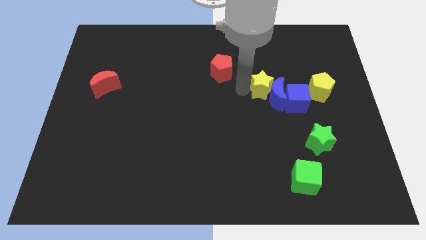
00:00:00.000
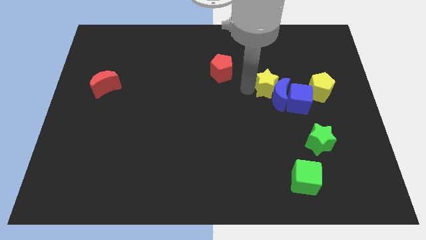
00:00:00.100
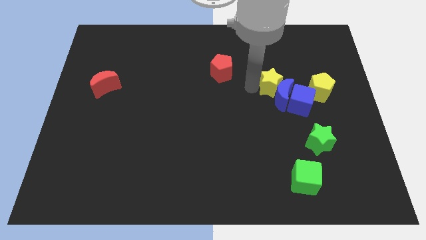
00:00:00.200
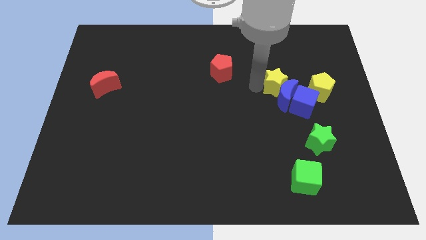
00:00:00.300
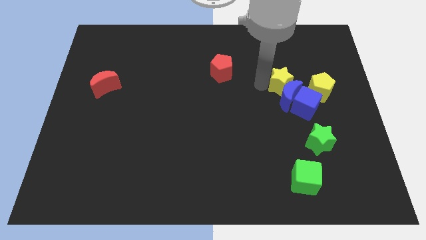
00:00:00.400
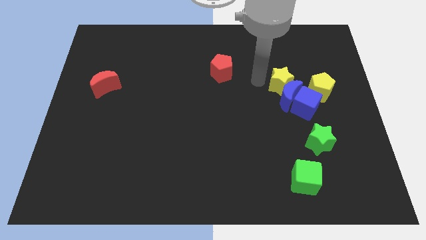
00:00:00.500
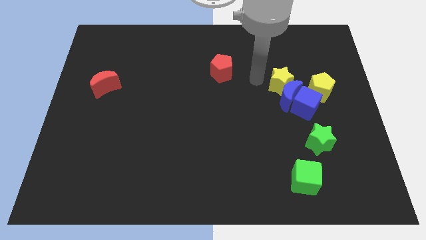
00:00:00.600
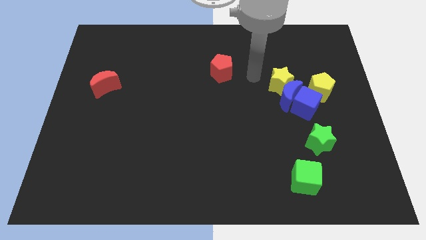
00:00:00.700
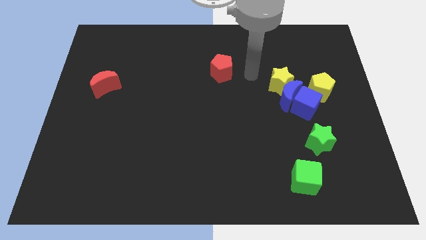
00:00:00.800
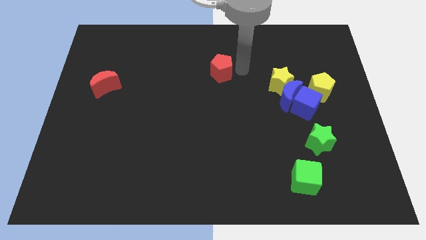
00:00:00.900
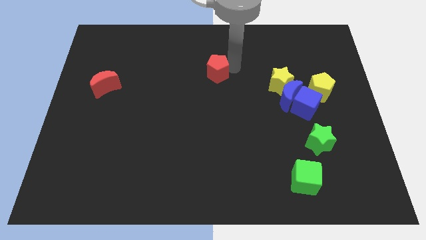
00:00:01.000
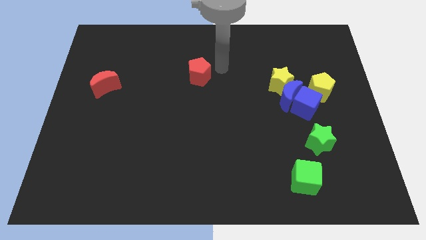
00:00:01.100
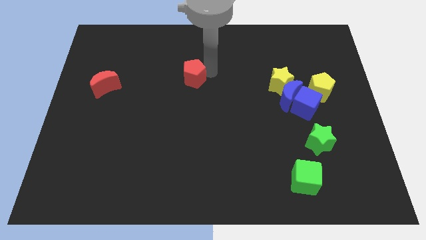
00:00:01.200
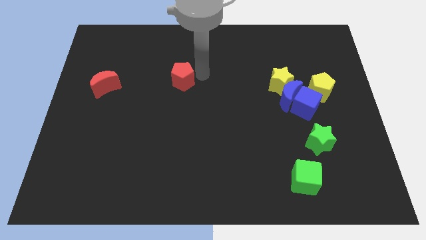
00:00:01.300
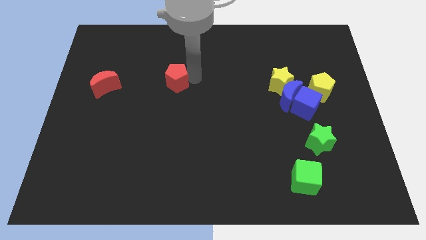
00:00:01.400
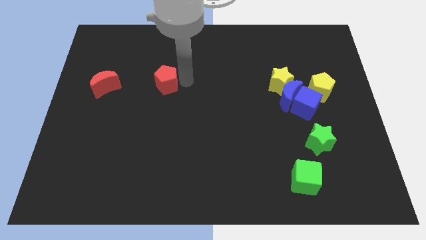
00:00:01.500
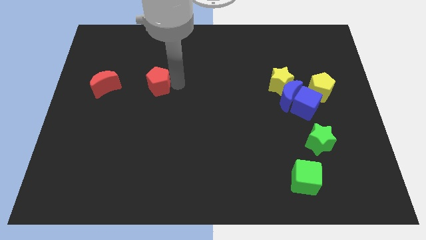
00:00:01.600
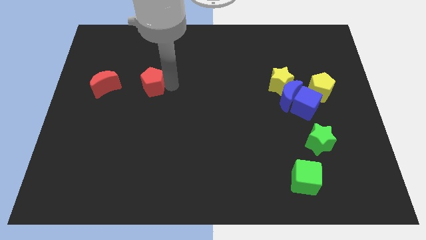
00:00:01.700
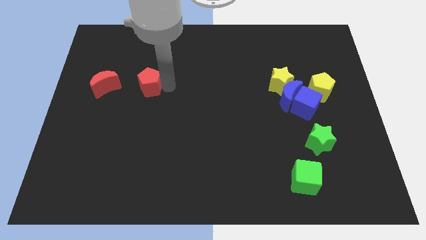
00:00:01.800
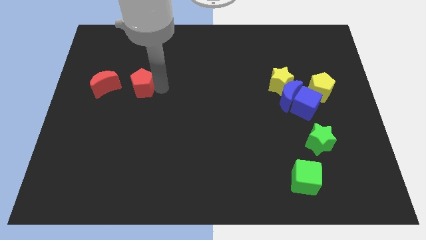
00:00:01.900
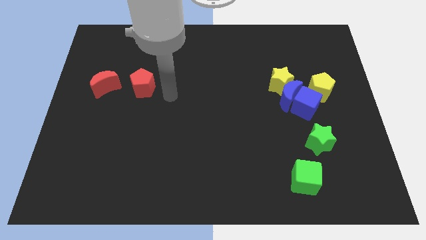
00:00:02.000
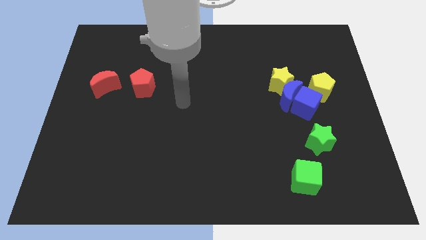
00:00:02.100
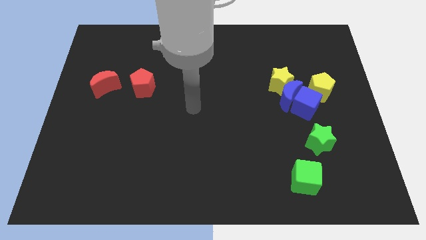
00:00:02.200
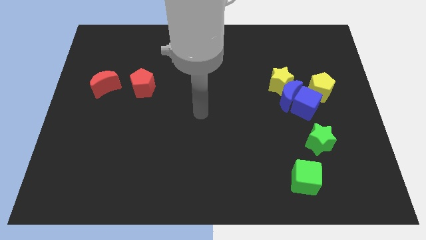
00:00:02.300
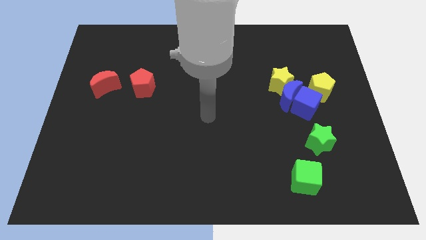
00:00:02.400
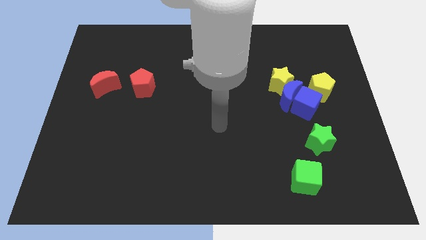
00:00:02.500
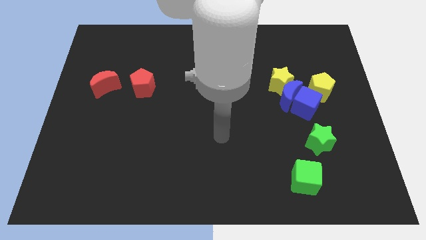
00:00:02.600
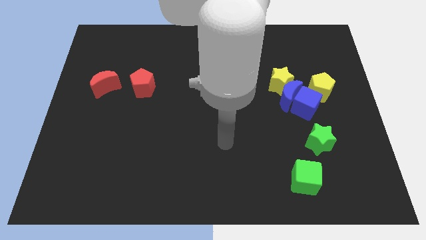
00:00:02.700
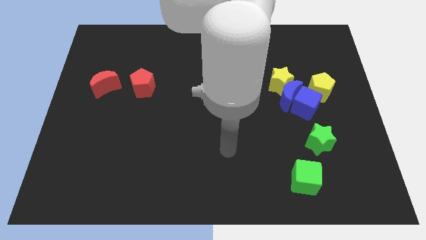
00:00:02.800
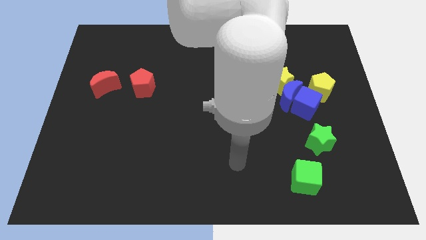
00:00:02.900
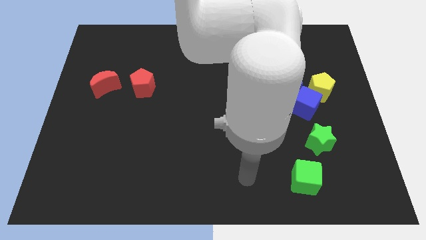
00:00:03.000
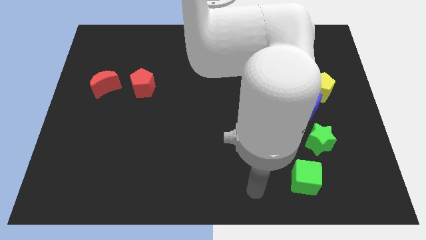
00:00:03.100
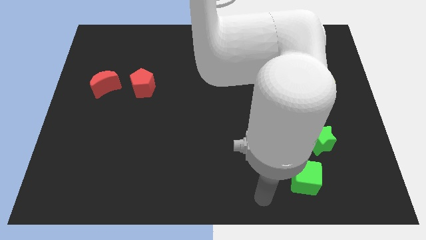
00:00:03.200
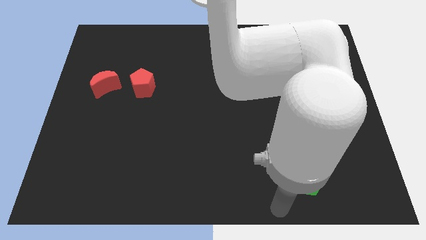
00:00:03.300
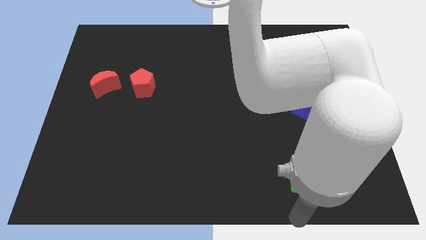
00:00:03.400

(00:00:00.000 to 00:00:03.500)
place the red pentagon close to red moon

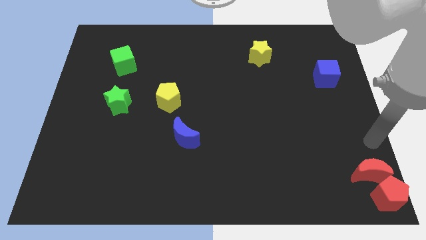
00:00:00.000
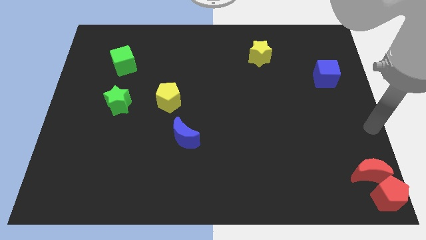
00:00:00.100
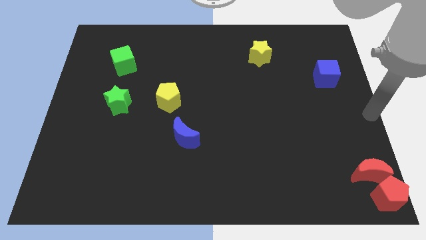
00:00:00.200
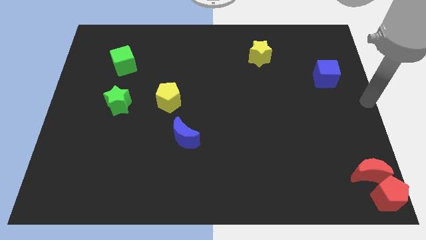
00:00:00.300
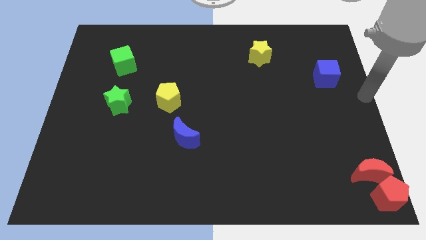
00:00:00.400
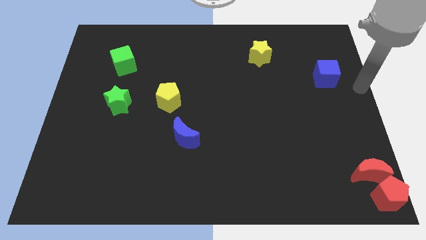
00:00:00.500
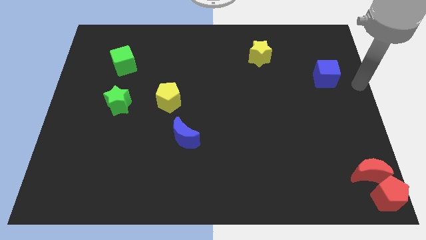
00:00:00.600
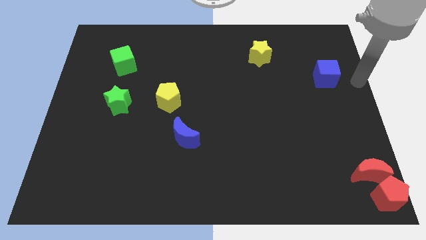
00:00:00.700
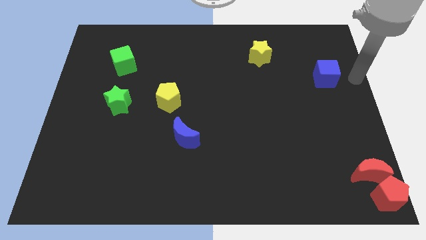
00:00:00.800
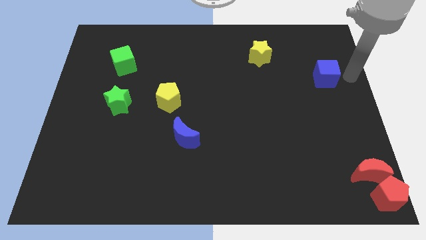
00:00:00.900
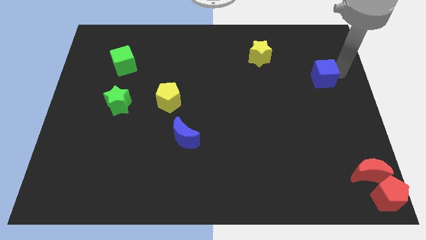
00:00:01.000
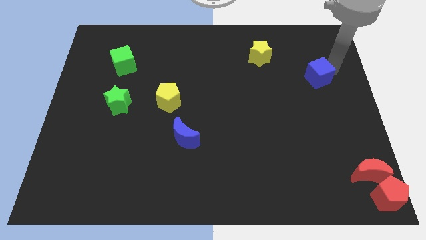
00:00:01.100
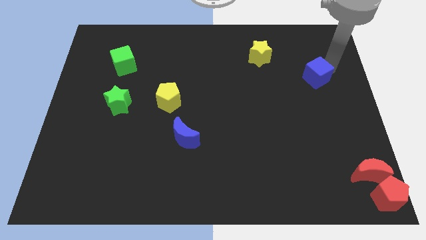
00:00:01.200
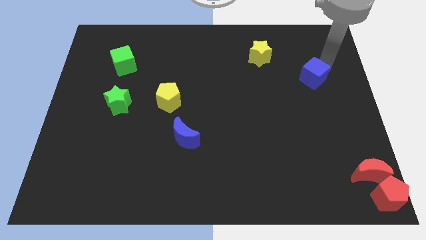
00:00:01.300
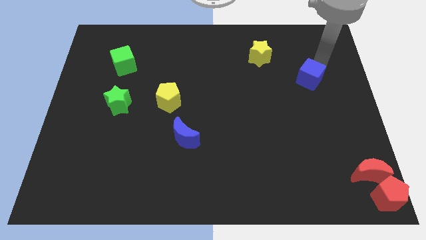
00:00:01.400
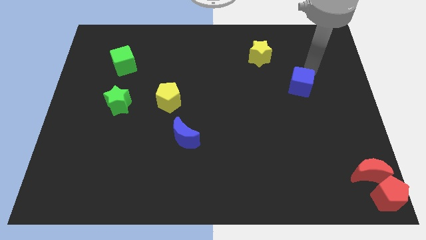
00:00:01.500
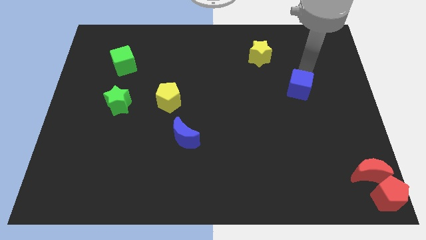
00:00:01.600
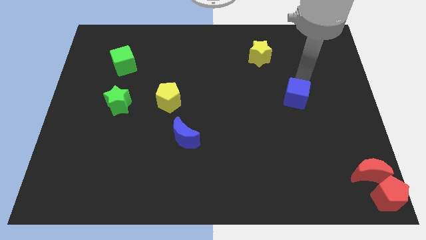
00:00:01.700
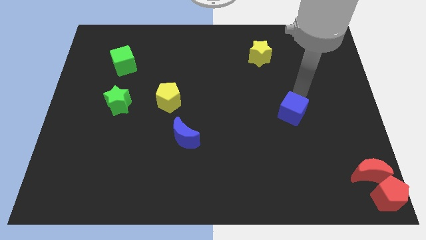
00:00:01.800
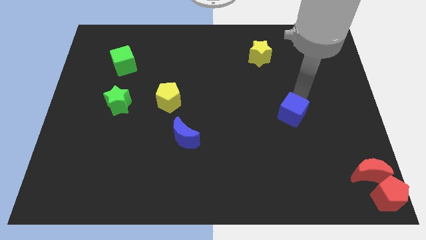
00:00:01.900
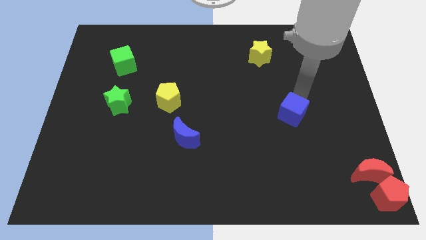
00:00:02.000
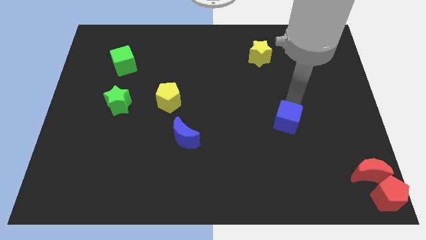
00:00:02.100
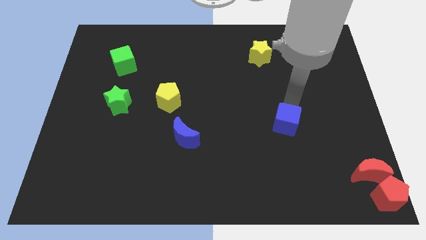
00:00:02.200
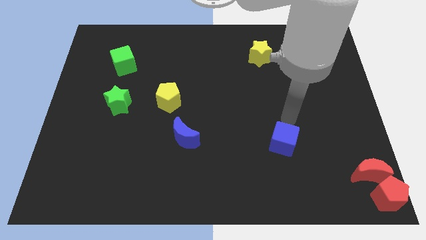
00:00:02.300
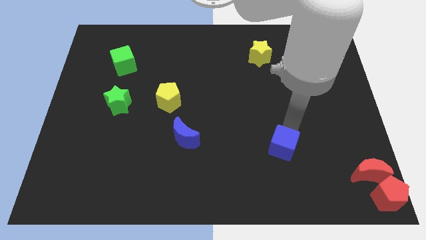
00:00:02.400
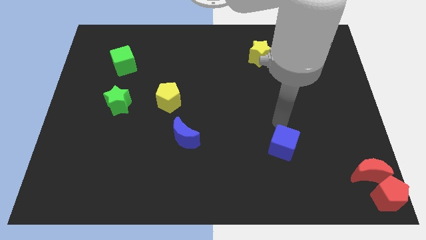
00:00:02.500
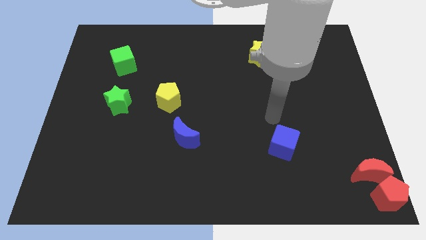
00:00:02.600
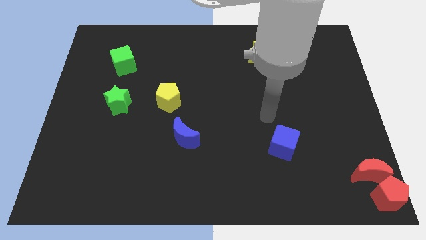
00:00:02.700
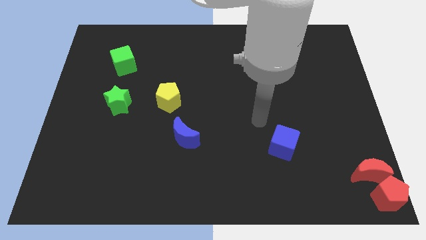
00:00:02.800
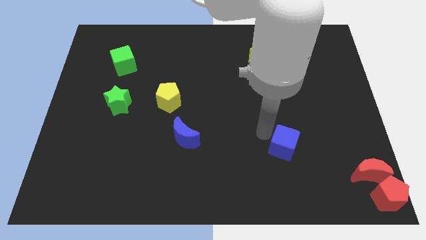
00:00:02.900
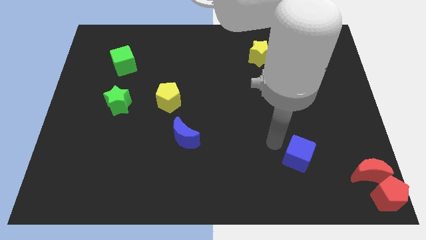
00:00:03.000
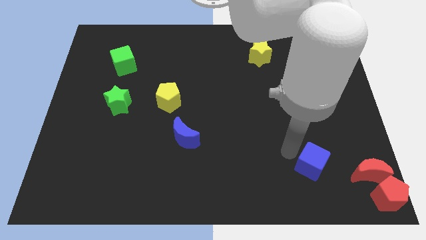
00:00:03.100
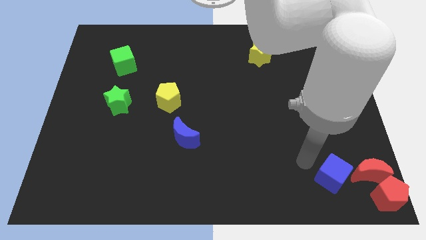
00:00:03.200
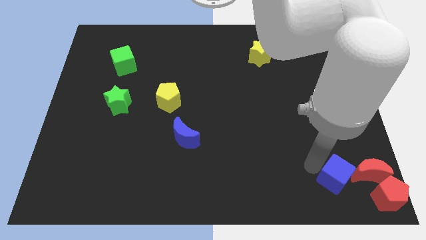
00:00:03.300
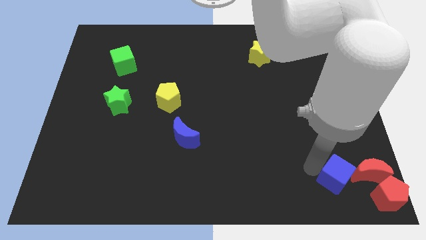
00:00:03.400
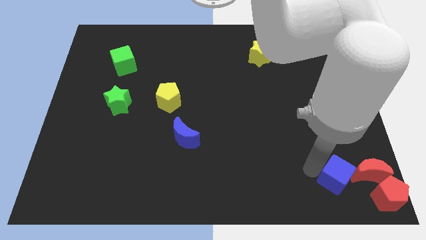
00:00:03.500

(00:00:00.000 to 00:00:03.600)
place the blue cube to the left side of the red moon

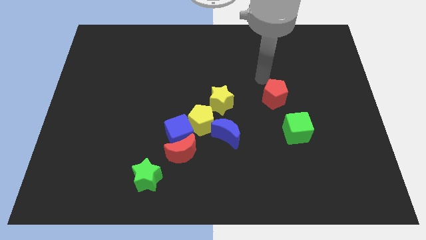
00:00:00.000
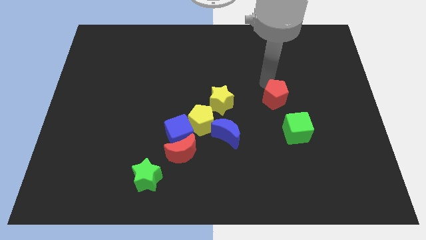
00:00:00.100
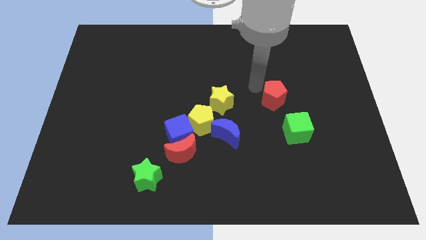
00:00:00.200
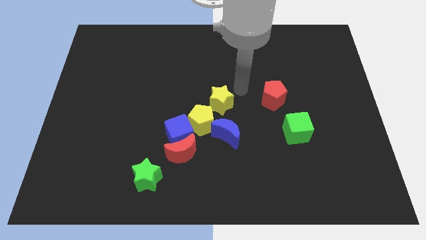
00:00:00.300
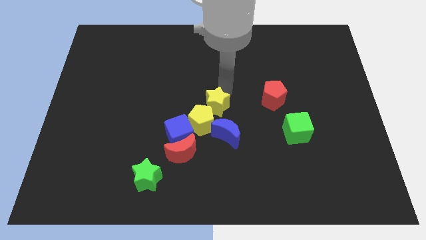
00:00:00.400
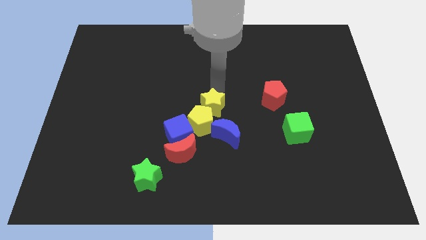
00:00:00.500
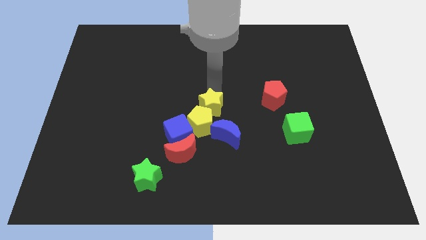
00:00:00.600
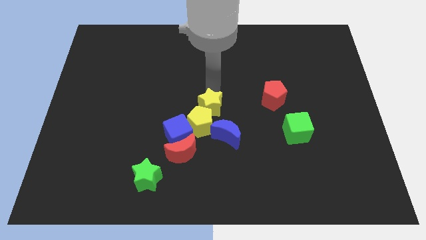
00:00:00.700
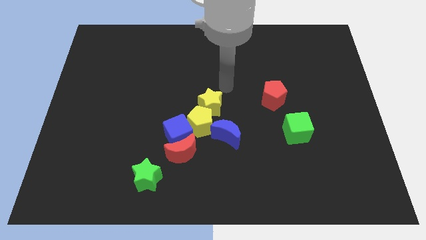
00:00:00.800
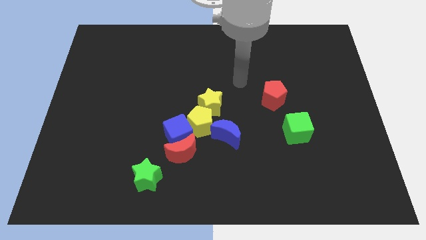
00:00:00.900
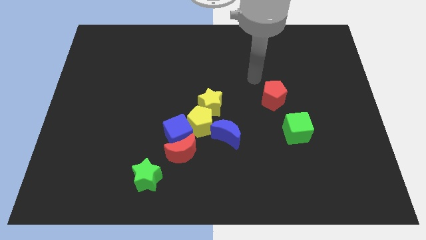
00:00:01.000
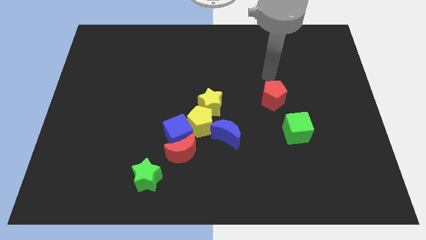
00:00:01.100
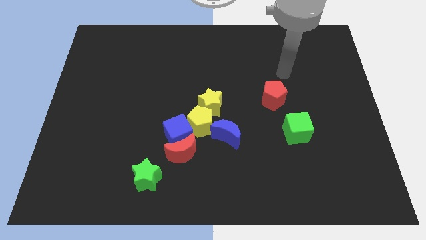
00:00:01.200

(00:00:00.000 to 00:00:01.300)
push yellow star into the yellow pentagon

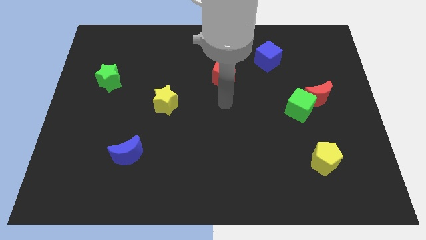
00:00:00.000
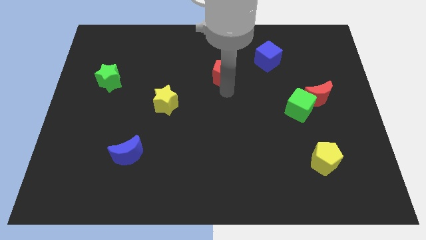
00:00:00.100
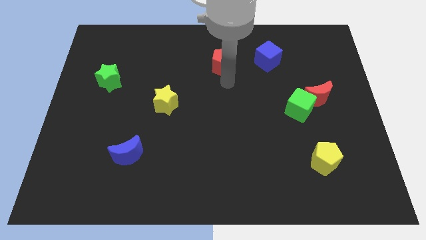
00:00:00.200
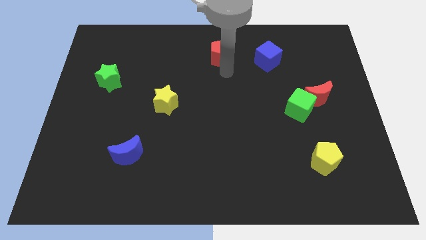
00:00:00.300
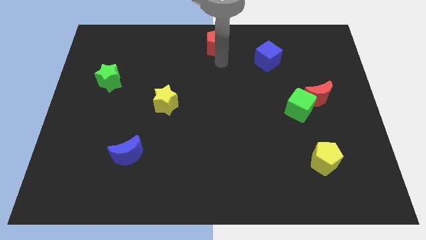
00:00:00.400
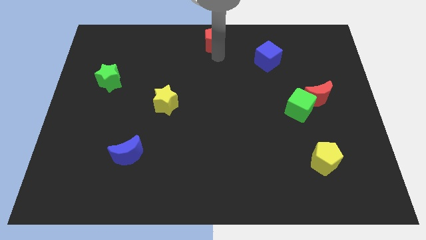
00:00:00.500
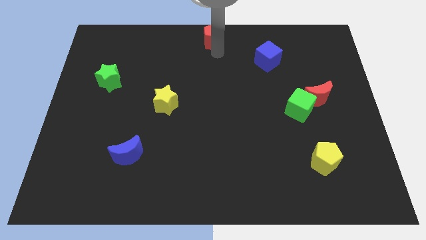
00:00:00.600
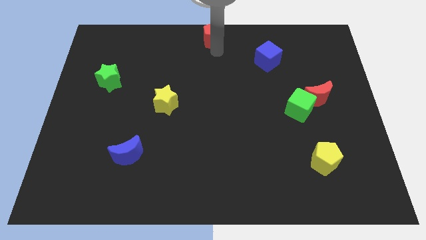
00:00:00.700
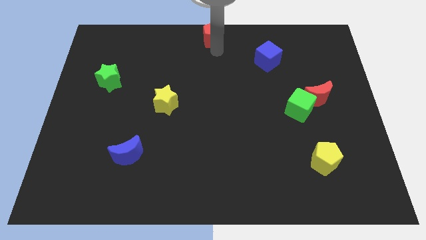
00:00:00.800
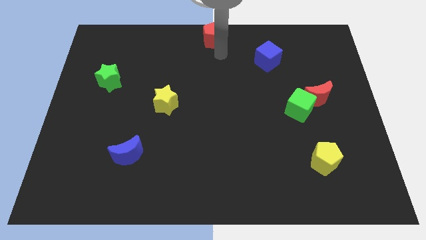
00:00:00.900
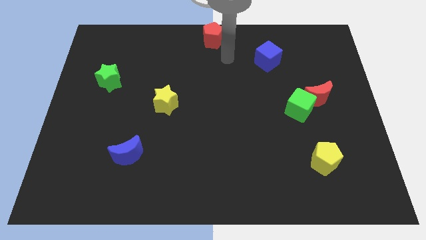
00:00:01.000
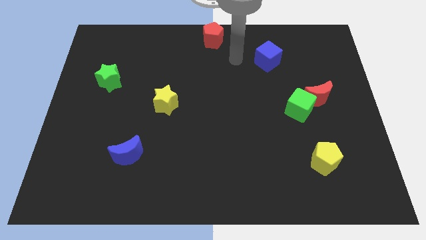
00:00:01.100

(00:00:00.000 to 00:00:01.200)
place the red pentagon towards the top center of the board
